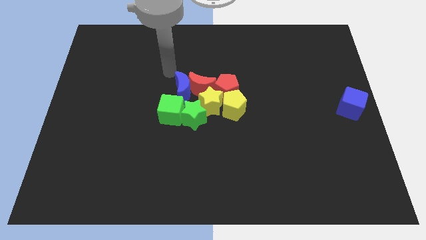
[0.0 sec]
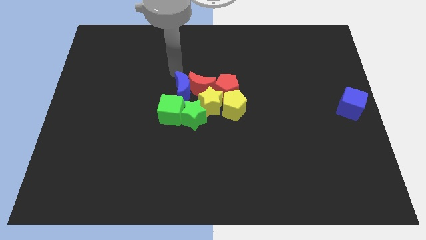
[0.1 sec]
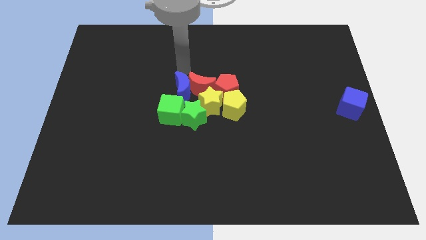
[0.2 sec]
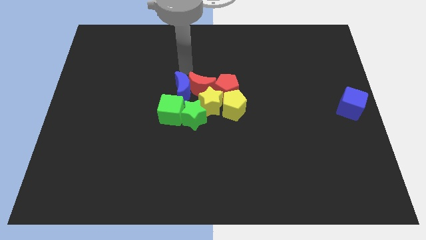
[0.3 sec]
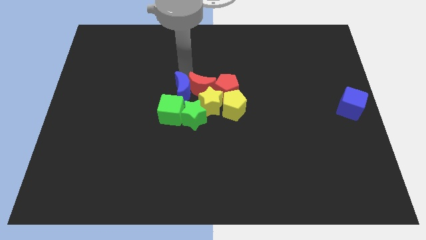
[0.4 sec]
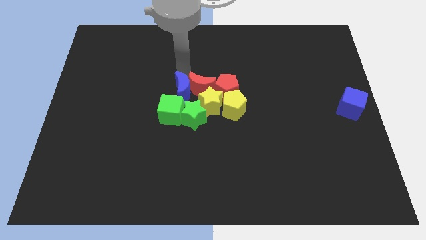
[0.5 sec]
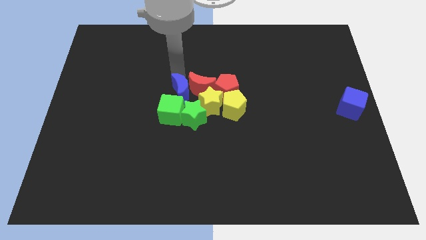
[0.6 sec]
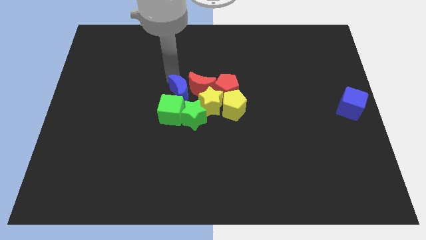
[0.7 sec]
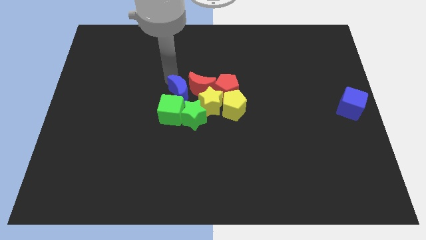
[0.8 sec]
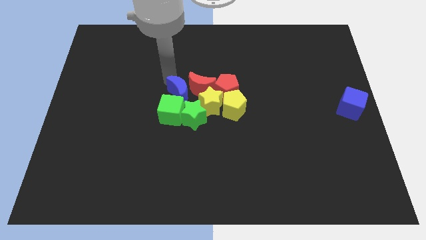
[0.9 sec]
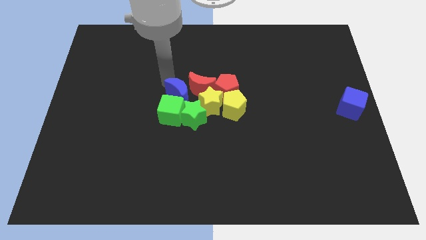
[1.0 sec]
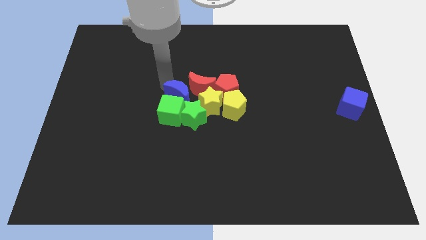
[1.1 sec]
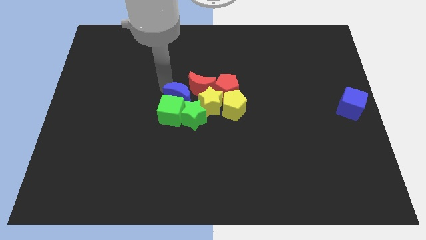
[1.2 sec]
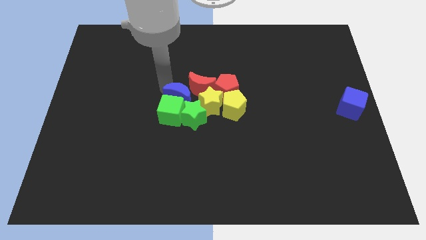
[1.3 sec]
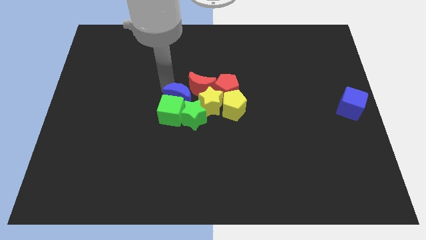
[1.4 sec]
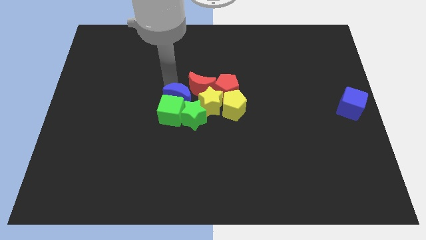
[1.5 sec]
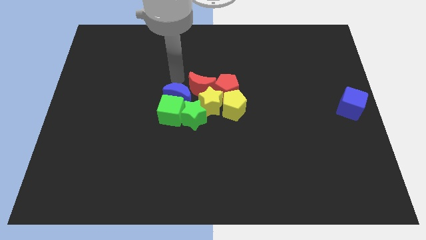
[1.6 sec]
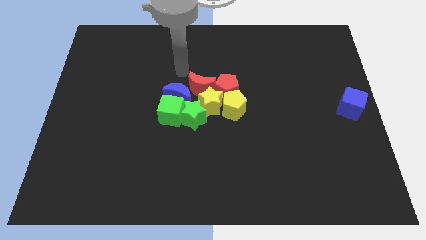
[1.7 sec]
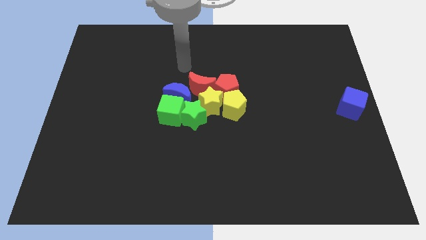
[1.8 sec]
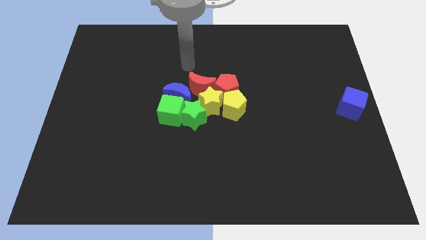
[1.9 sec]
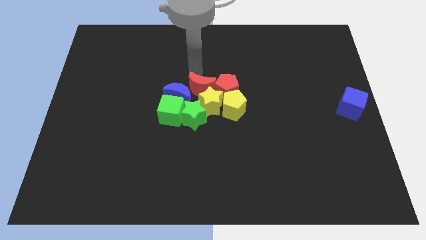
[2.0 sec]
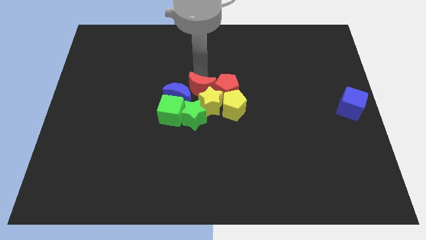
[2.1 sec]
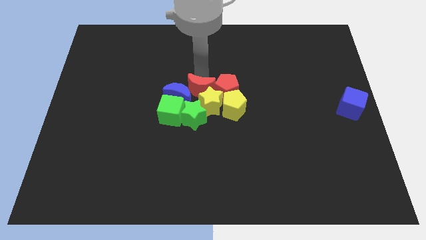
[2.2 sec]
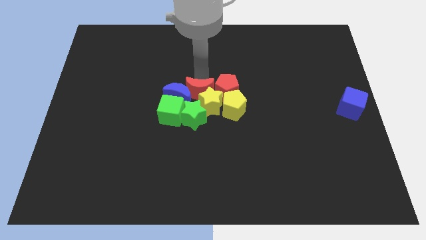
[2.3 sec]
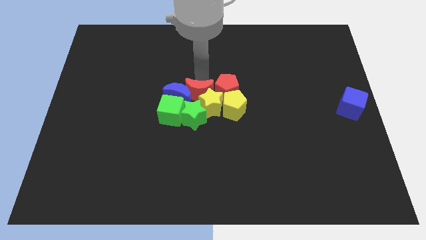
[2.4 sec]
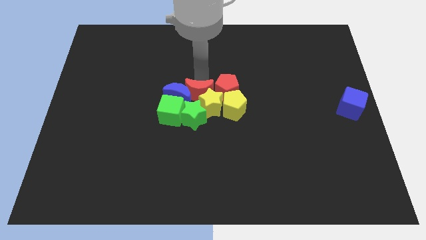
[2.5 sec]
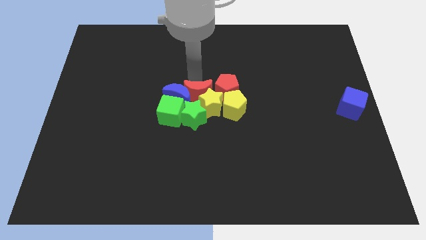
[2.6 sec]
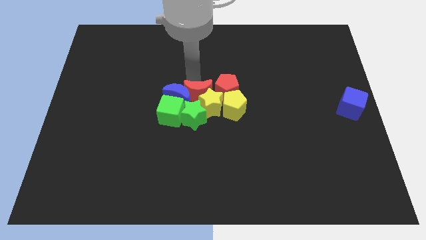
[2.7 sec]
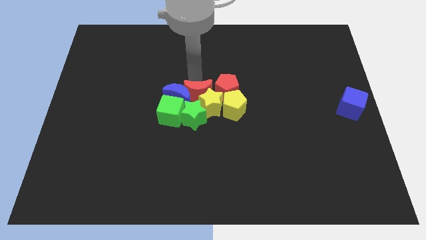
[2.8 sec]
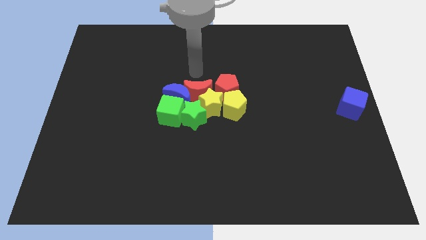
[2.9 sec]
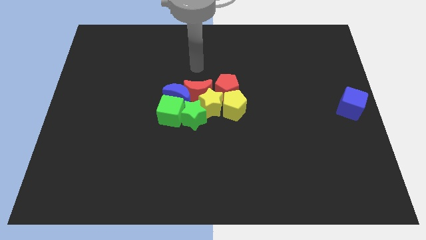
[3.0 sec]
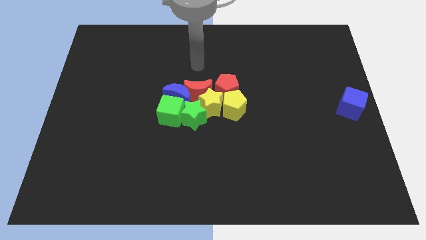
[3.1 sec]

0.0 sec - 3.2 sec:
push the blocks into each other

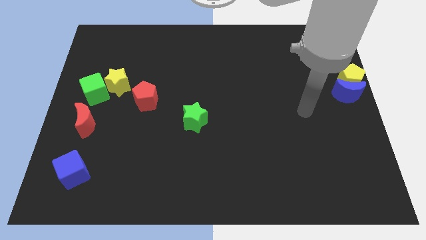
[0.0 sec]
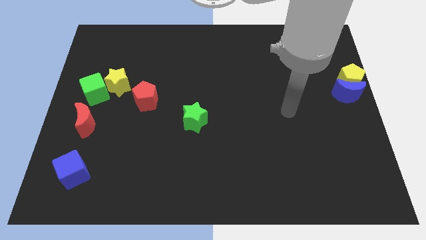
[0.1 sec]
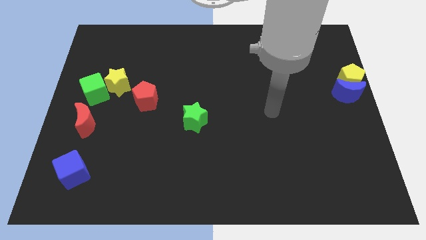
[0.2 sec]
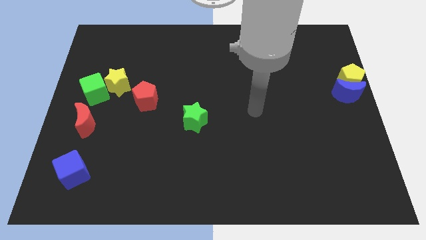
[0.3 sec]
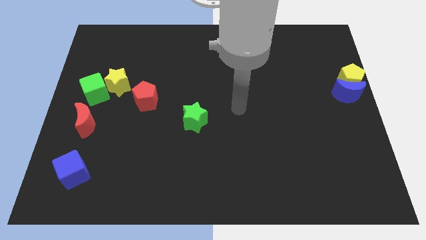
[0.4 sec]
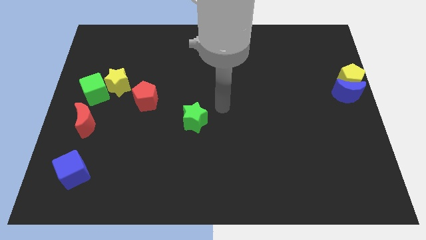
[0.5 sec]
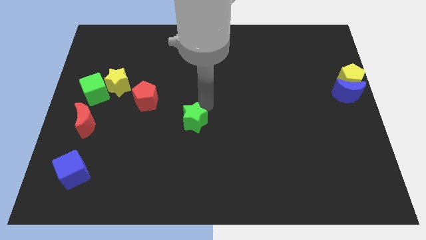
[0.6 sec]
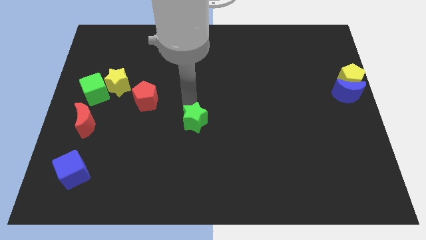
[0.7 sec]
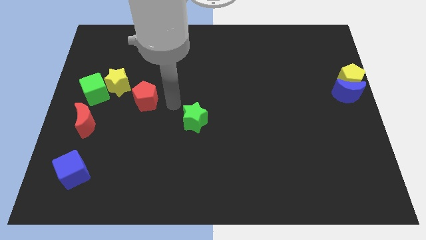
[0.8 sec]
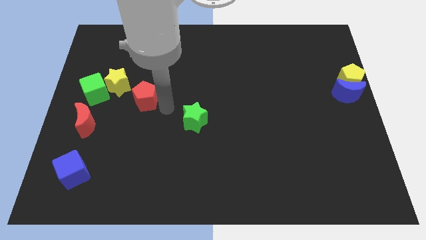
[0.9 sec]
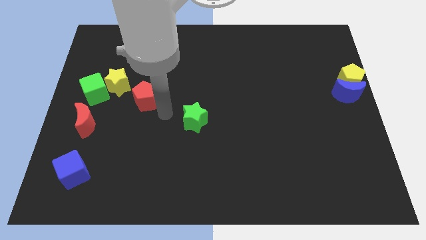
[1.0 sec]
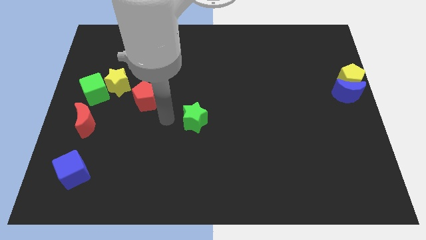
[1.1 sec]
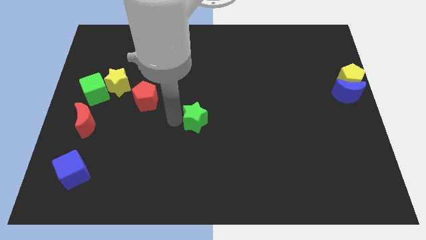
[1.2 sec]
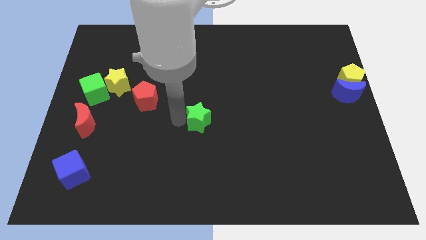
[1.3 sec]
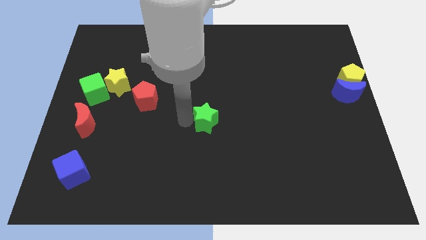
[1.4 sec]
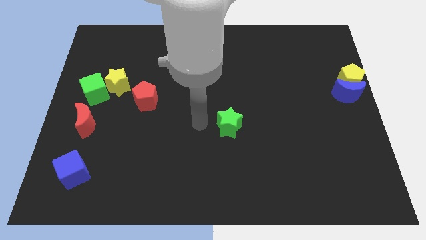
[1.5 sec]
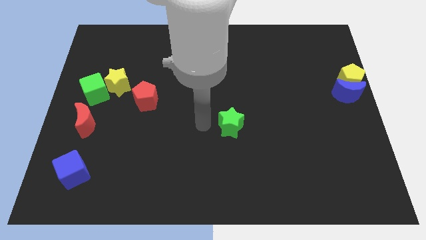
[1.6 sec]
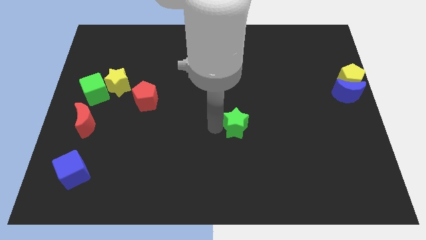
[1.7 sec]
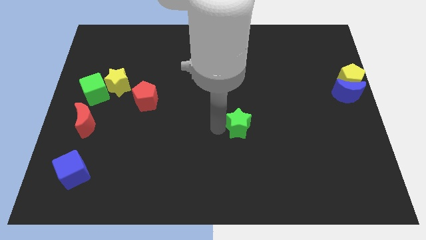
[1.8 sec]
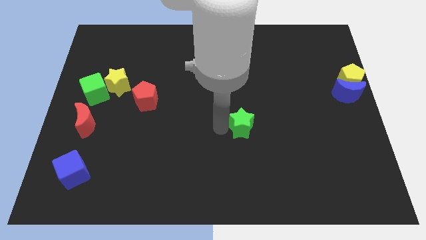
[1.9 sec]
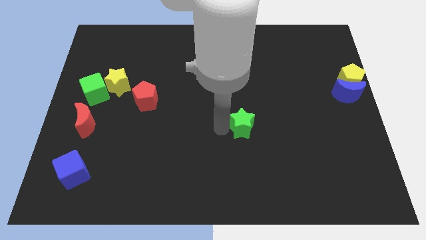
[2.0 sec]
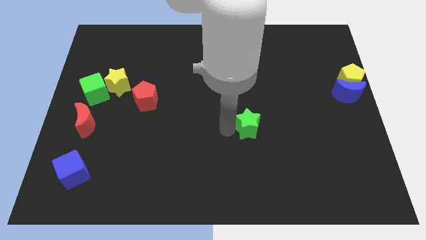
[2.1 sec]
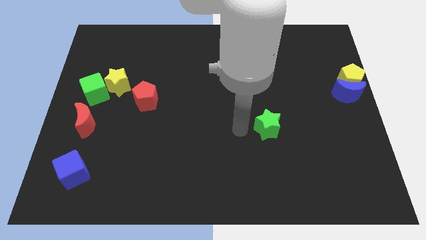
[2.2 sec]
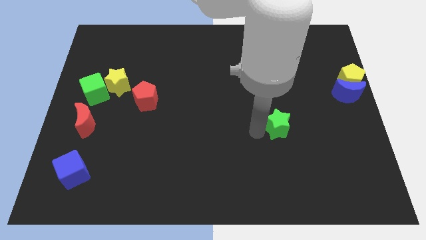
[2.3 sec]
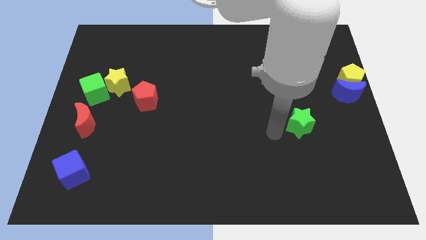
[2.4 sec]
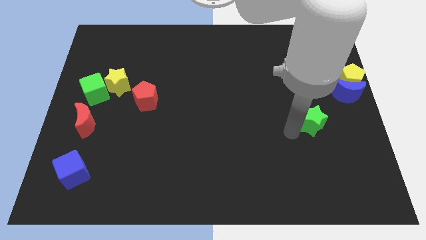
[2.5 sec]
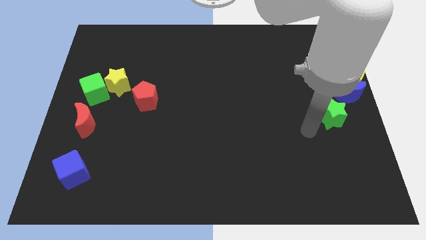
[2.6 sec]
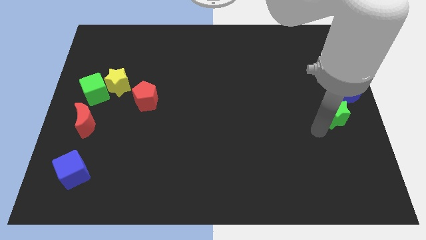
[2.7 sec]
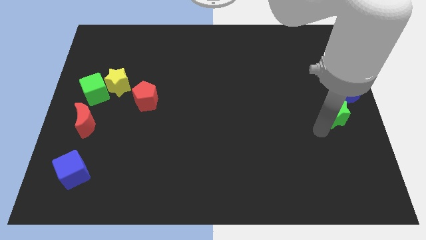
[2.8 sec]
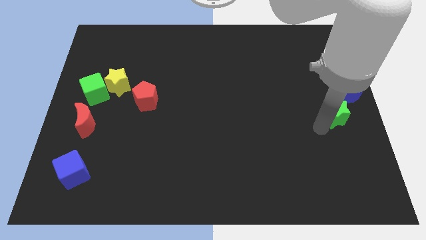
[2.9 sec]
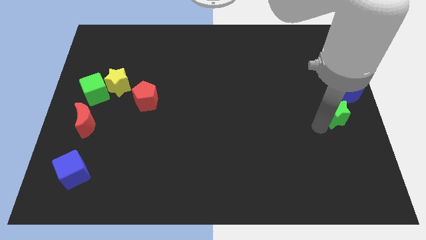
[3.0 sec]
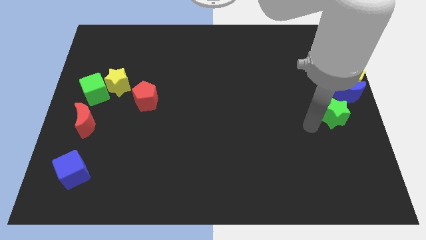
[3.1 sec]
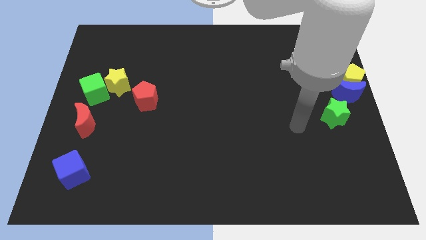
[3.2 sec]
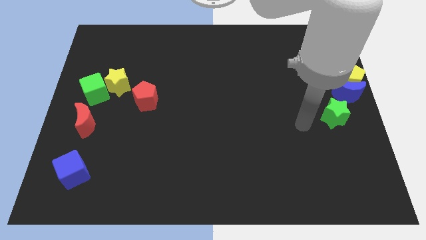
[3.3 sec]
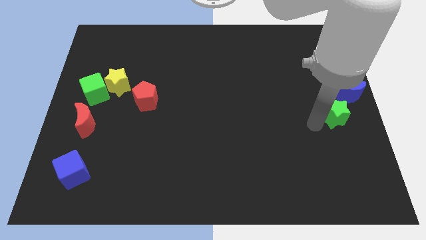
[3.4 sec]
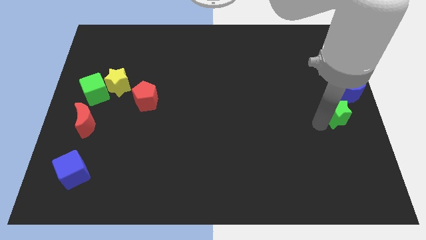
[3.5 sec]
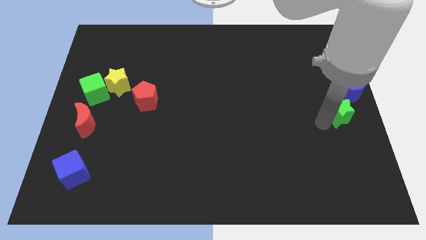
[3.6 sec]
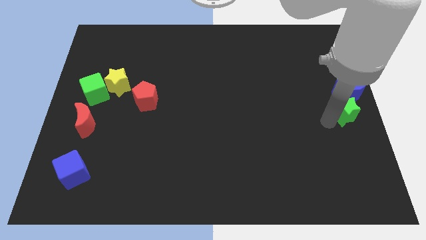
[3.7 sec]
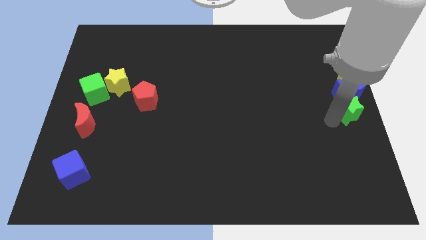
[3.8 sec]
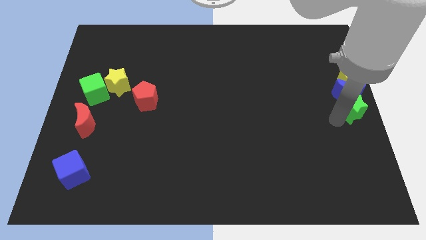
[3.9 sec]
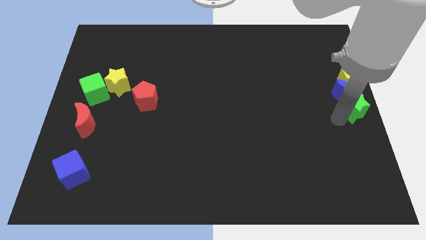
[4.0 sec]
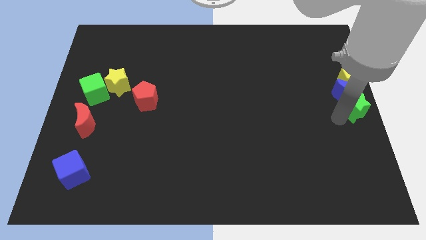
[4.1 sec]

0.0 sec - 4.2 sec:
place green star to the bottom of blue moon

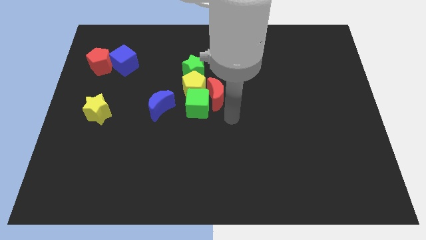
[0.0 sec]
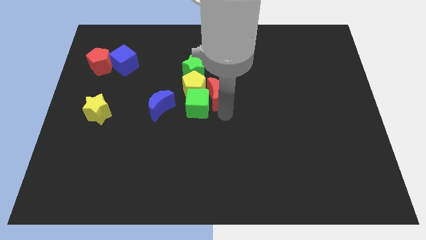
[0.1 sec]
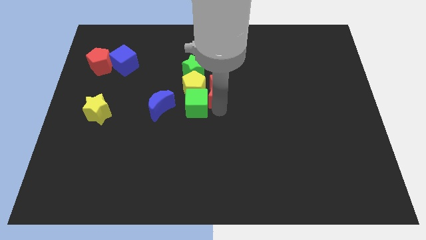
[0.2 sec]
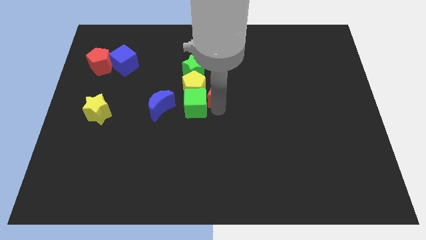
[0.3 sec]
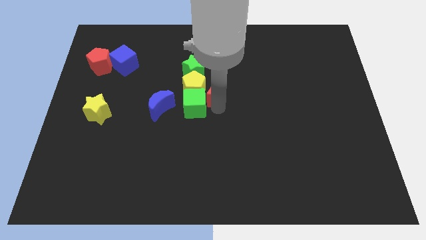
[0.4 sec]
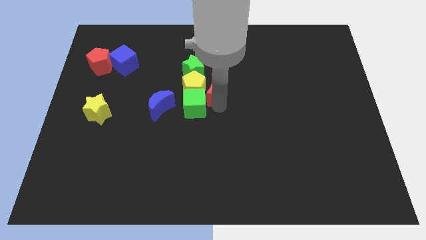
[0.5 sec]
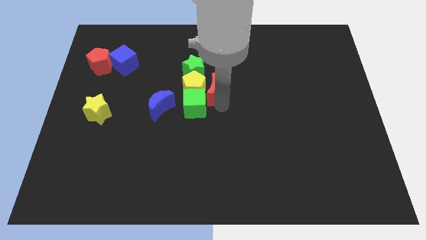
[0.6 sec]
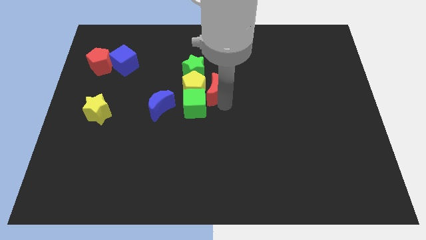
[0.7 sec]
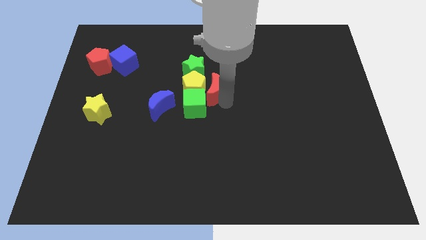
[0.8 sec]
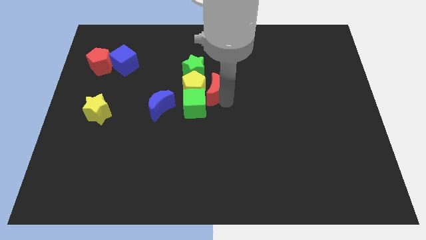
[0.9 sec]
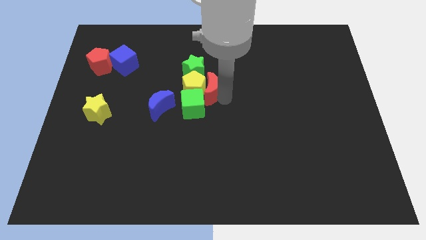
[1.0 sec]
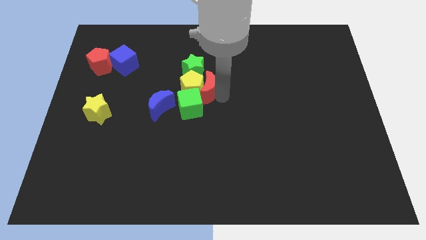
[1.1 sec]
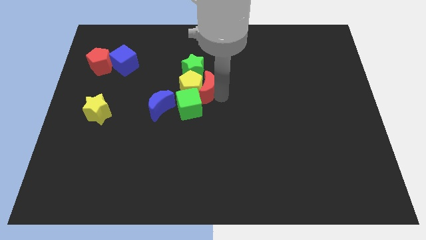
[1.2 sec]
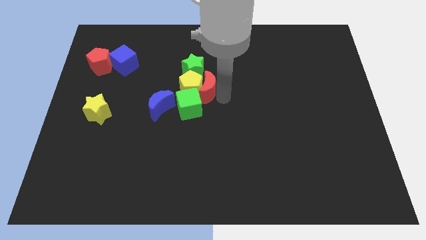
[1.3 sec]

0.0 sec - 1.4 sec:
push the red crescent into the yellow pentagon

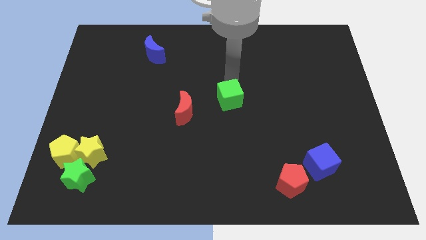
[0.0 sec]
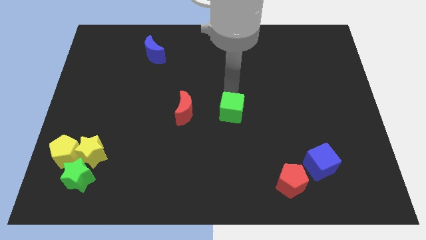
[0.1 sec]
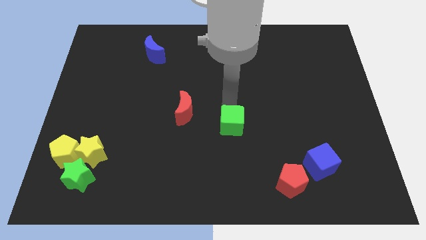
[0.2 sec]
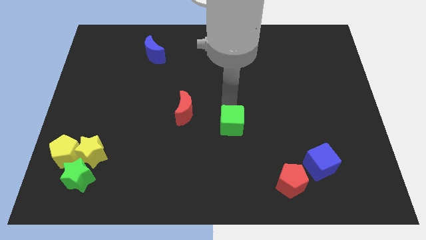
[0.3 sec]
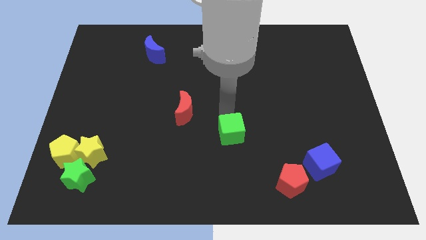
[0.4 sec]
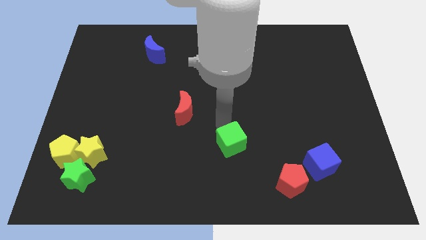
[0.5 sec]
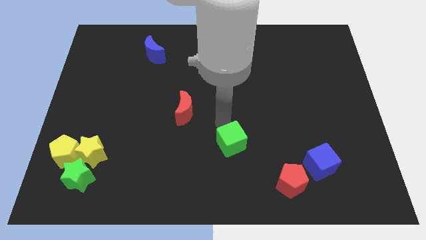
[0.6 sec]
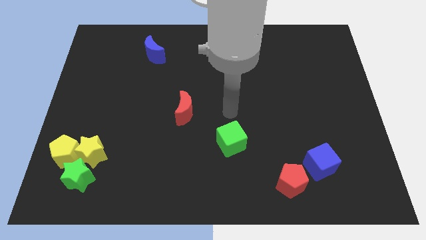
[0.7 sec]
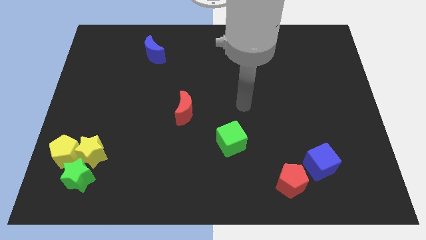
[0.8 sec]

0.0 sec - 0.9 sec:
push the green cube to the bottom of the board
